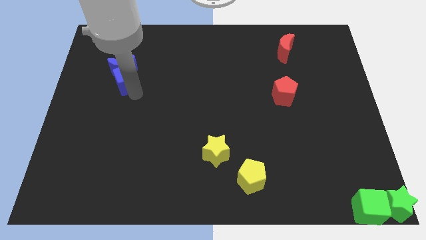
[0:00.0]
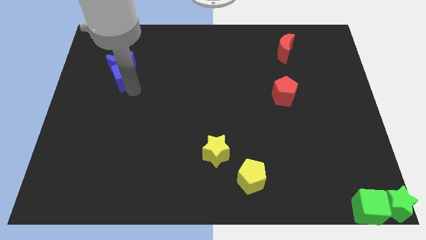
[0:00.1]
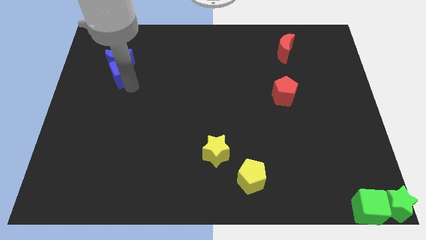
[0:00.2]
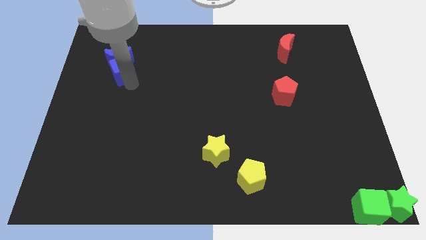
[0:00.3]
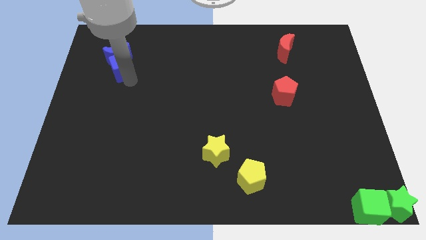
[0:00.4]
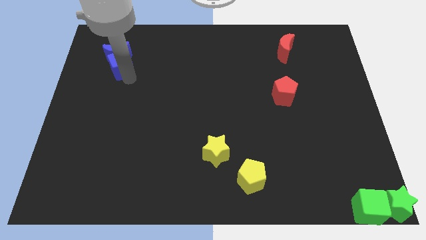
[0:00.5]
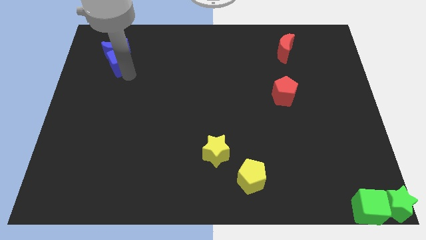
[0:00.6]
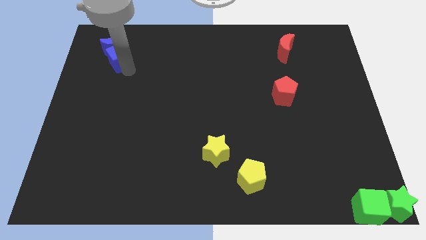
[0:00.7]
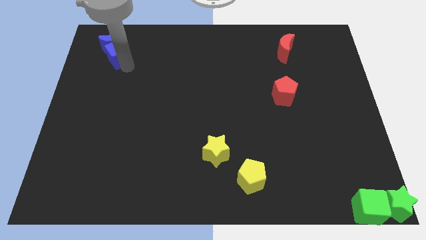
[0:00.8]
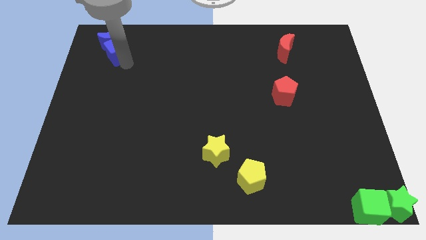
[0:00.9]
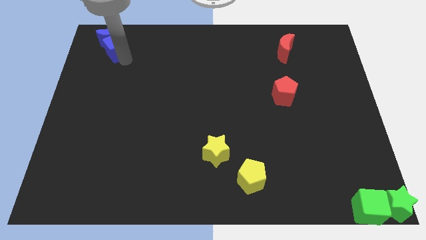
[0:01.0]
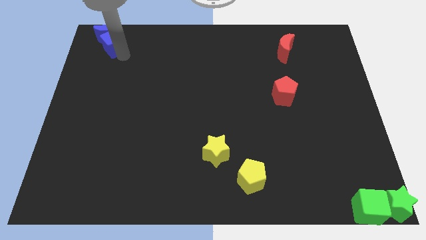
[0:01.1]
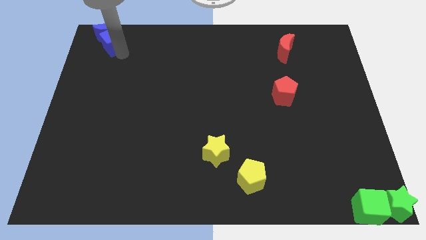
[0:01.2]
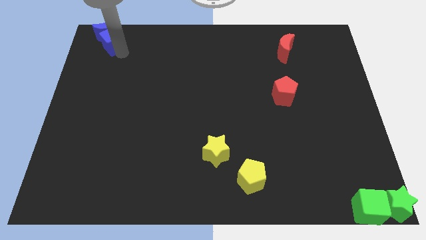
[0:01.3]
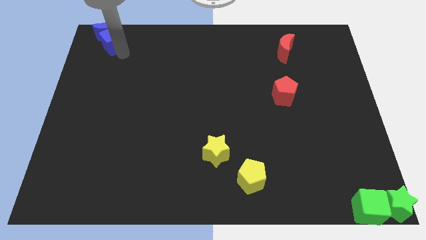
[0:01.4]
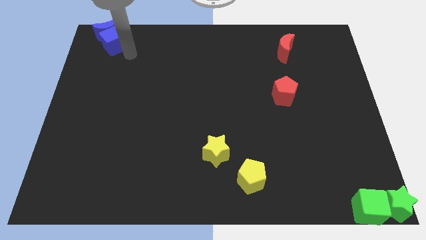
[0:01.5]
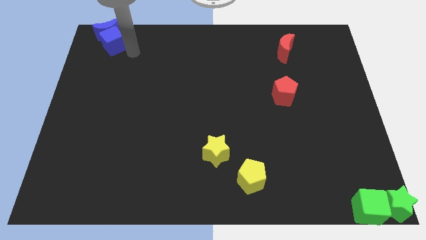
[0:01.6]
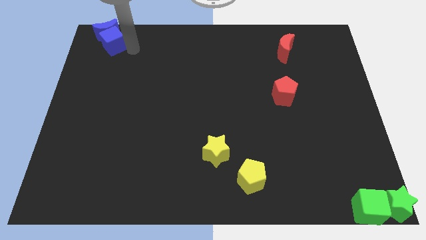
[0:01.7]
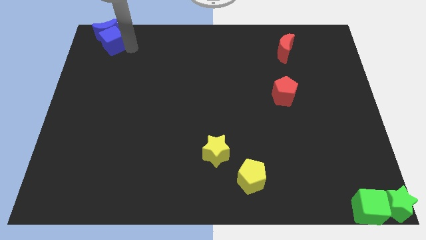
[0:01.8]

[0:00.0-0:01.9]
place blue moon and blue cube to the top left corner of the board

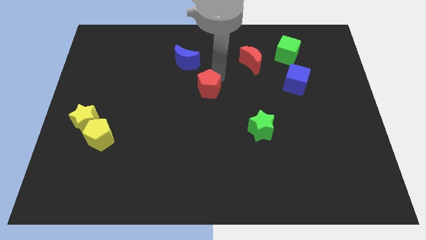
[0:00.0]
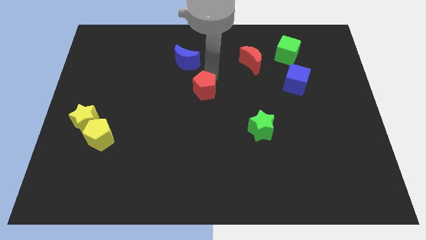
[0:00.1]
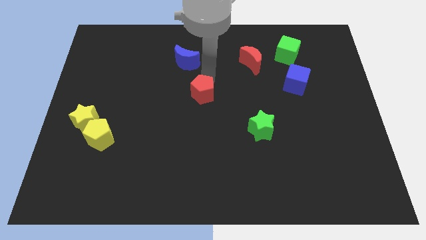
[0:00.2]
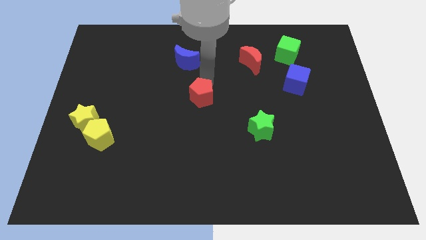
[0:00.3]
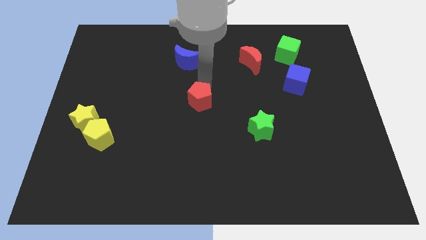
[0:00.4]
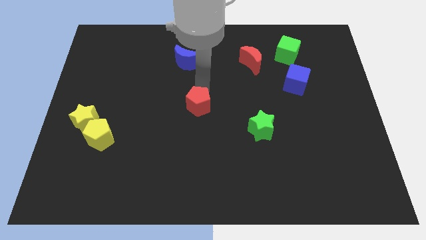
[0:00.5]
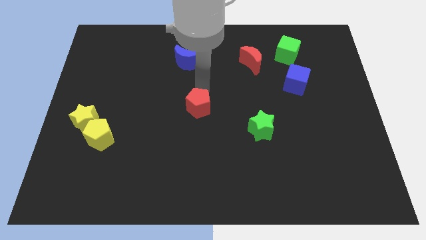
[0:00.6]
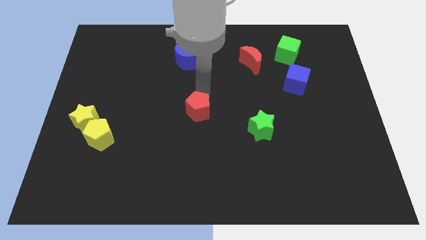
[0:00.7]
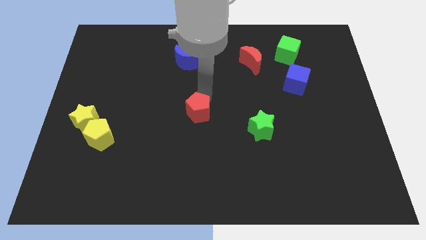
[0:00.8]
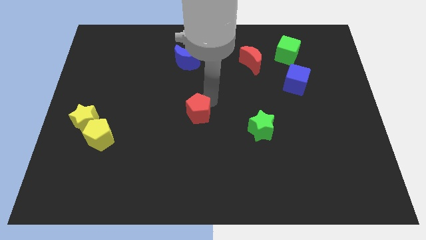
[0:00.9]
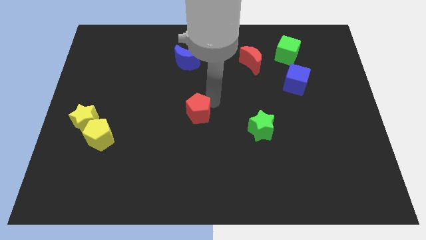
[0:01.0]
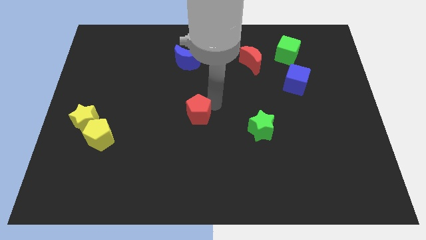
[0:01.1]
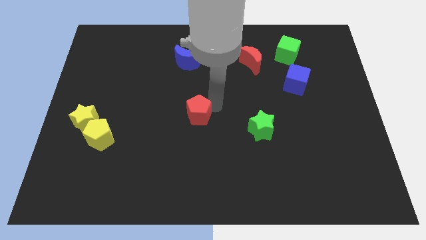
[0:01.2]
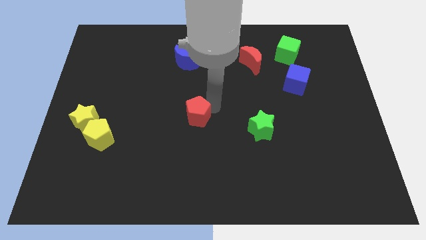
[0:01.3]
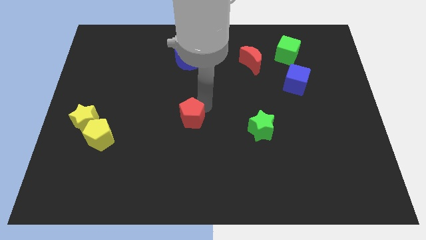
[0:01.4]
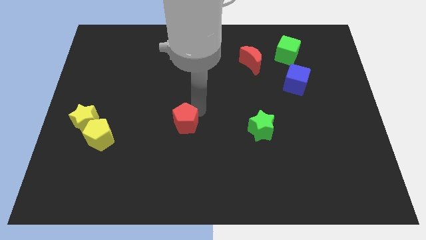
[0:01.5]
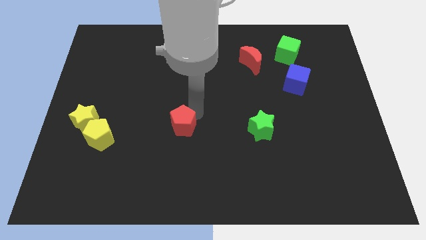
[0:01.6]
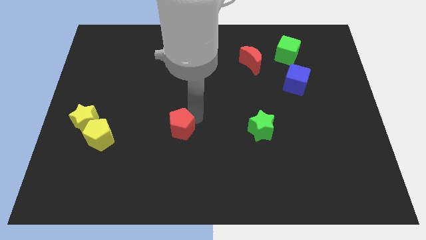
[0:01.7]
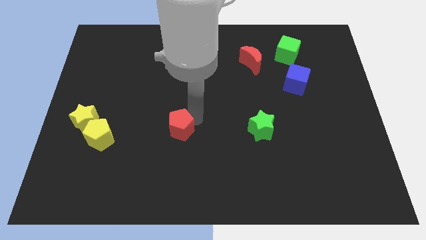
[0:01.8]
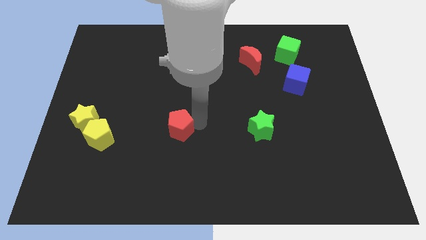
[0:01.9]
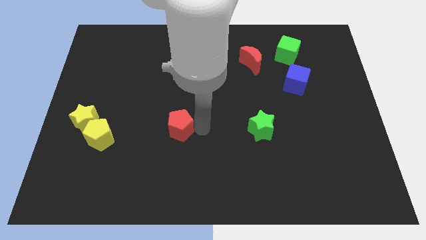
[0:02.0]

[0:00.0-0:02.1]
push the red pentagon in between yellow and green star

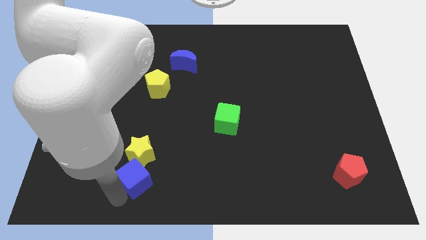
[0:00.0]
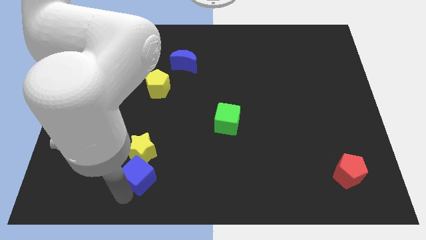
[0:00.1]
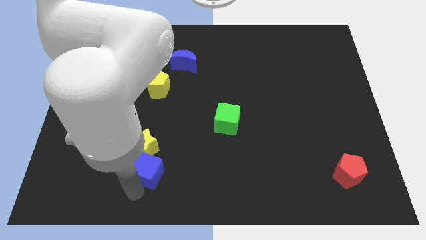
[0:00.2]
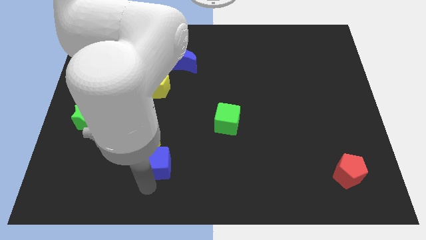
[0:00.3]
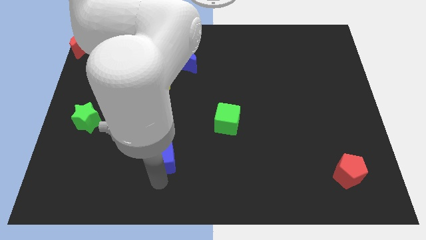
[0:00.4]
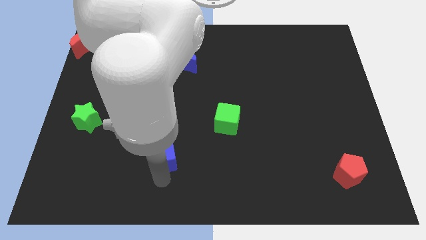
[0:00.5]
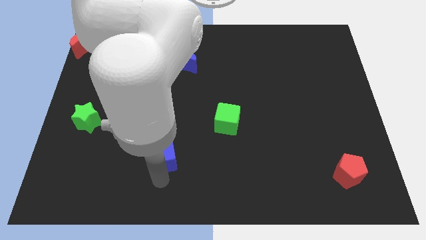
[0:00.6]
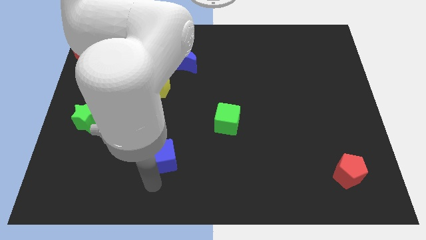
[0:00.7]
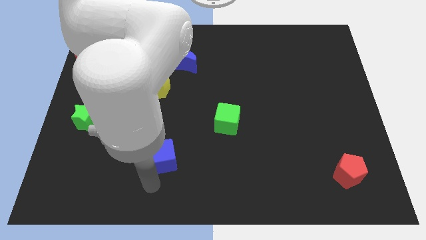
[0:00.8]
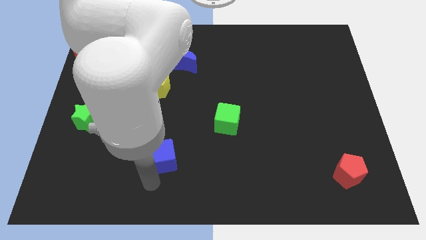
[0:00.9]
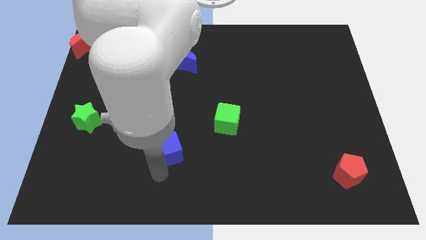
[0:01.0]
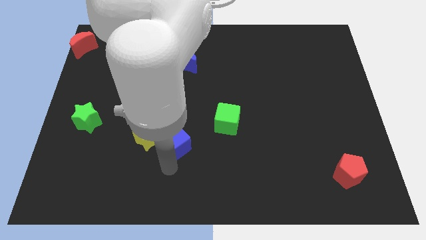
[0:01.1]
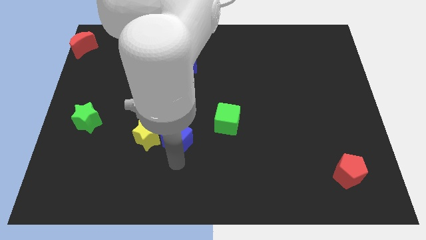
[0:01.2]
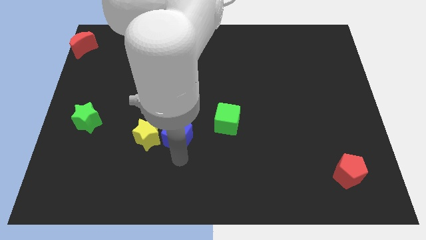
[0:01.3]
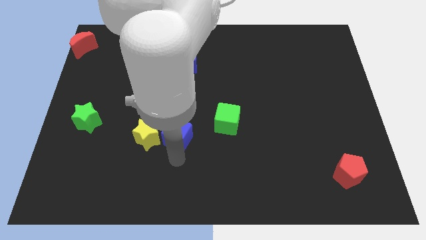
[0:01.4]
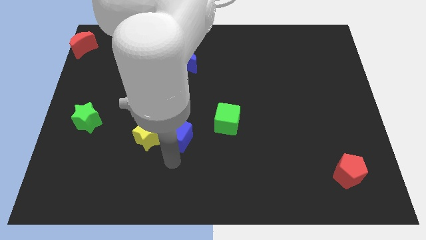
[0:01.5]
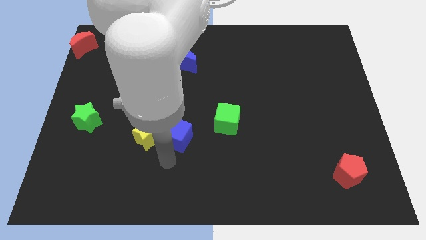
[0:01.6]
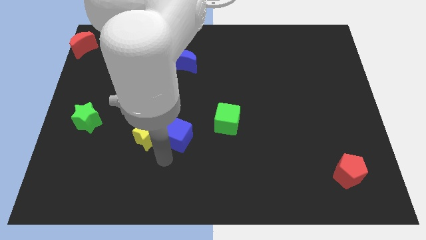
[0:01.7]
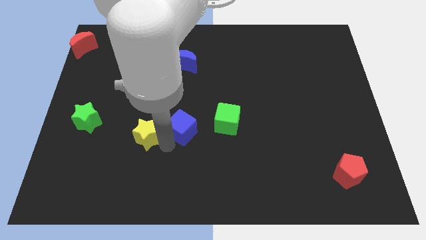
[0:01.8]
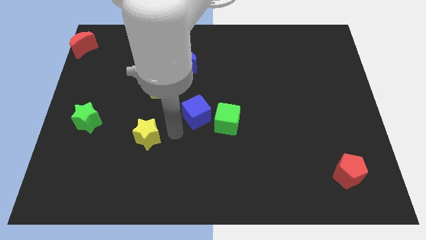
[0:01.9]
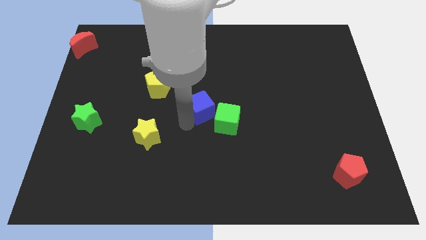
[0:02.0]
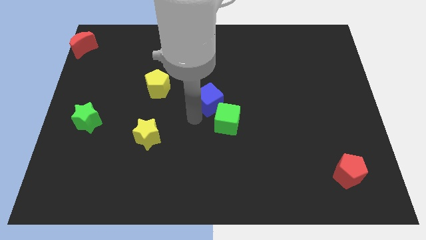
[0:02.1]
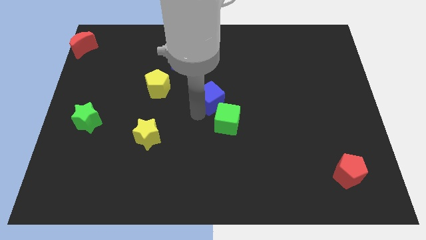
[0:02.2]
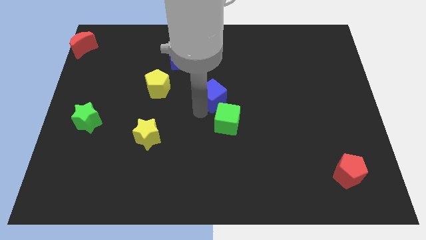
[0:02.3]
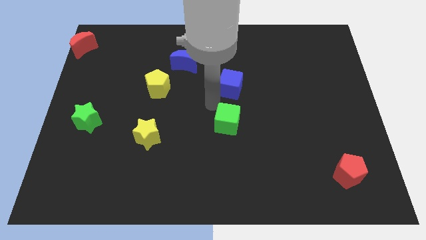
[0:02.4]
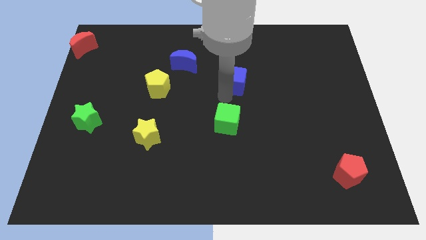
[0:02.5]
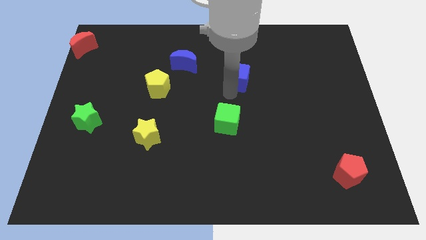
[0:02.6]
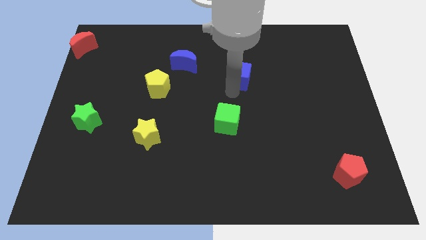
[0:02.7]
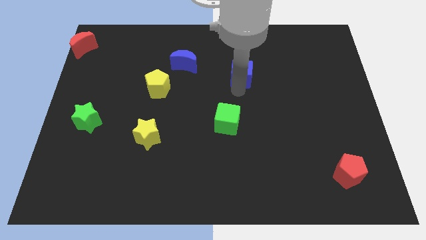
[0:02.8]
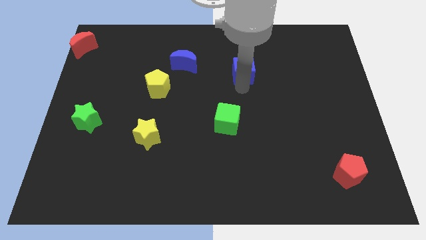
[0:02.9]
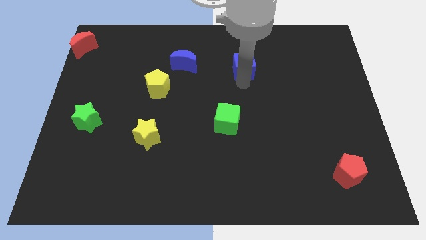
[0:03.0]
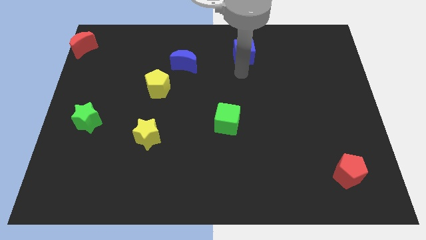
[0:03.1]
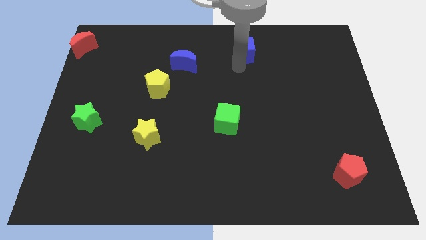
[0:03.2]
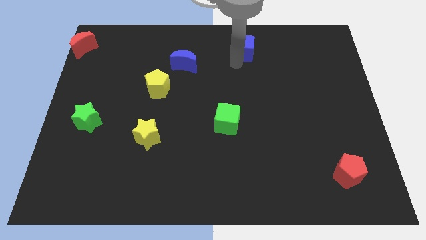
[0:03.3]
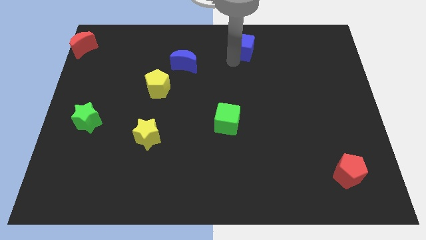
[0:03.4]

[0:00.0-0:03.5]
slide the blue cube towards the top side of the board

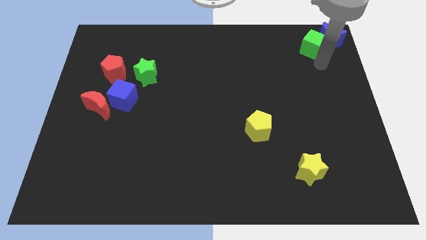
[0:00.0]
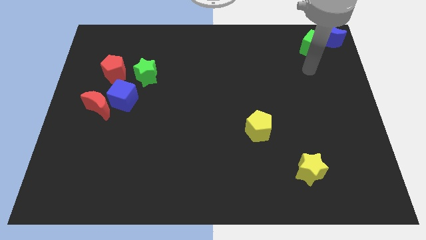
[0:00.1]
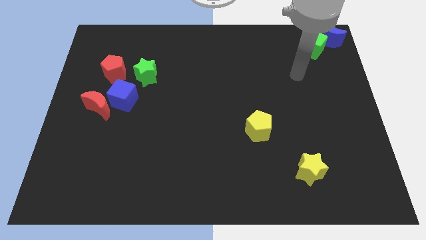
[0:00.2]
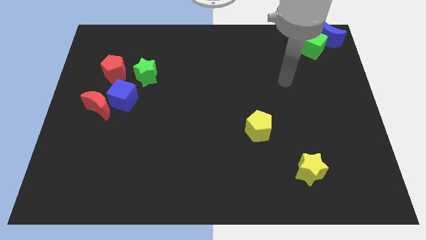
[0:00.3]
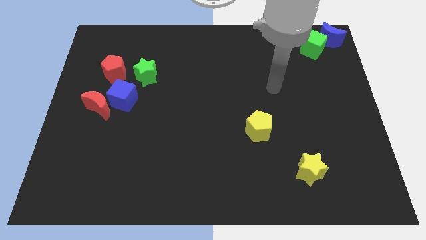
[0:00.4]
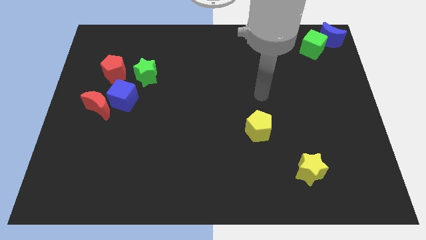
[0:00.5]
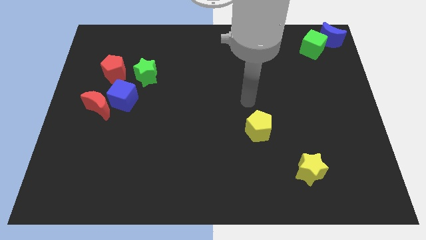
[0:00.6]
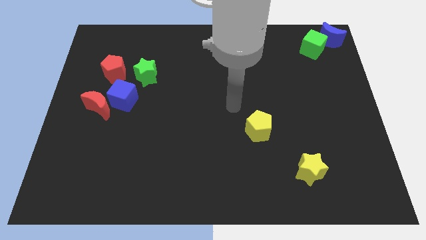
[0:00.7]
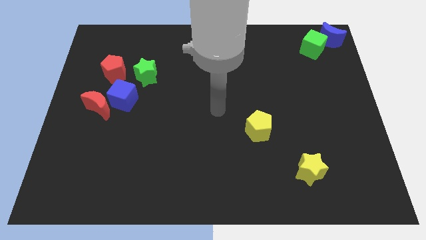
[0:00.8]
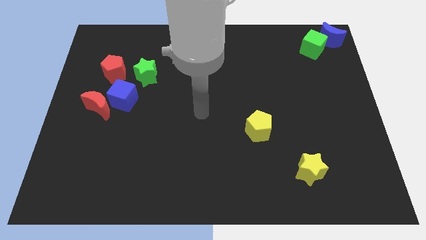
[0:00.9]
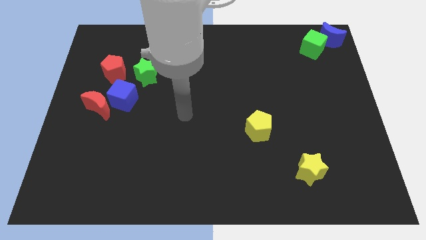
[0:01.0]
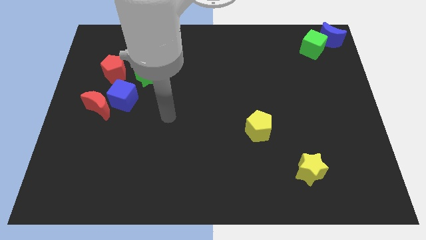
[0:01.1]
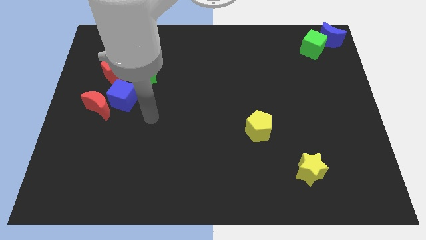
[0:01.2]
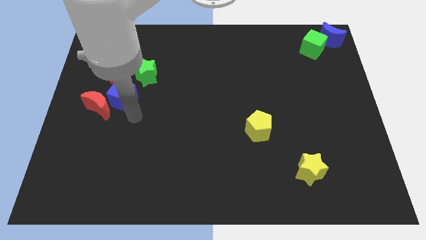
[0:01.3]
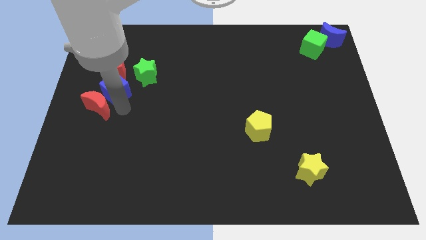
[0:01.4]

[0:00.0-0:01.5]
move your arm close to the blue cube
